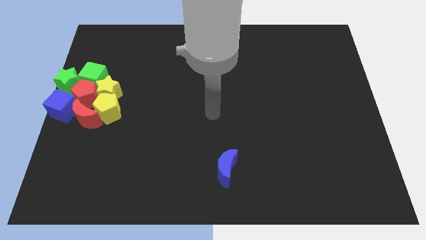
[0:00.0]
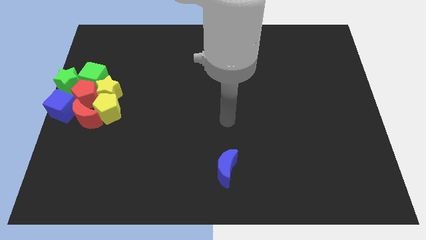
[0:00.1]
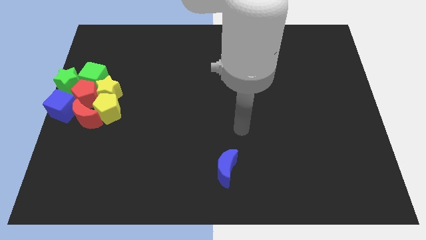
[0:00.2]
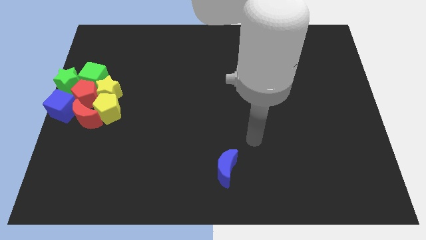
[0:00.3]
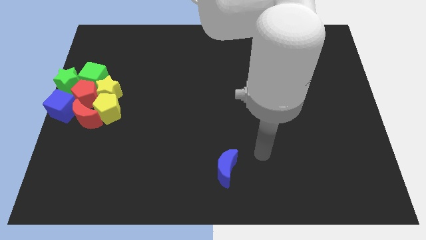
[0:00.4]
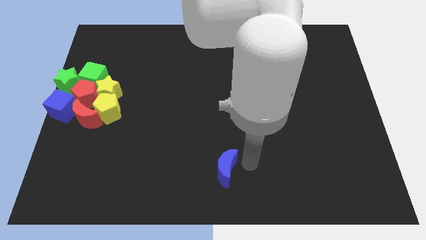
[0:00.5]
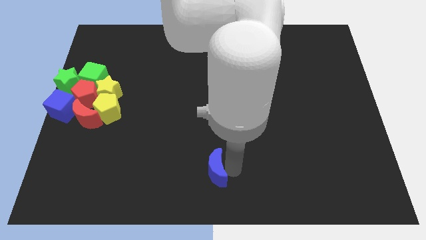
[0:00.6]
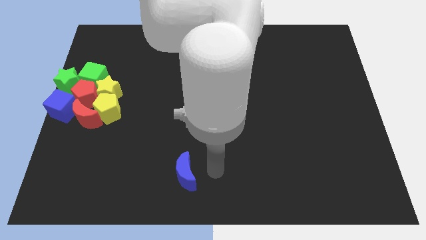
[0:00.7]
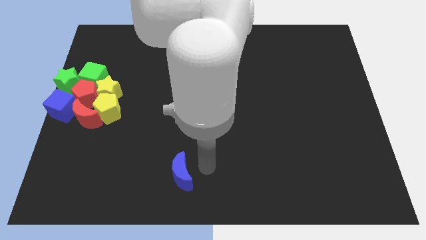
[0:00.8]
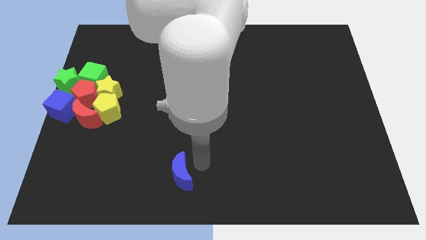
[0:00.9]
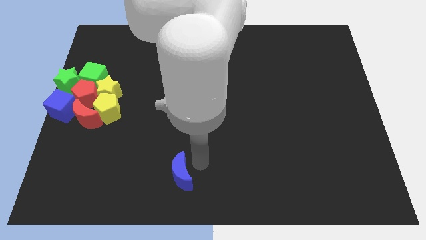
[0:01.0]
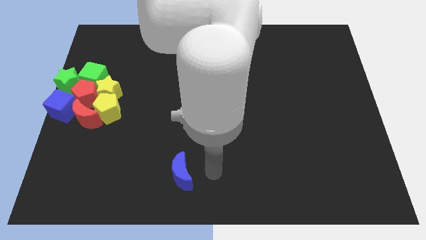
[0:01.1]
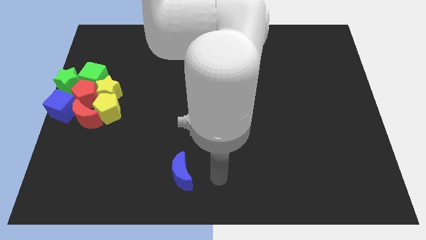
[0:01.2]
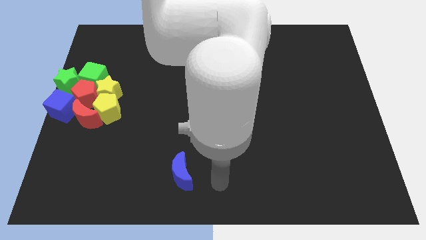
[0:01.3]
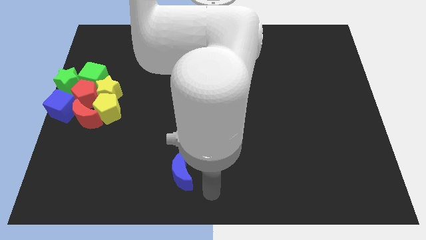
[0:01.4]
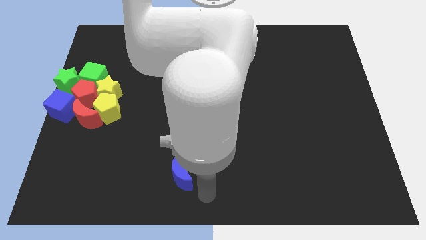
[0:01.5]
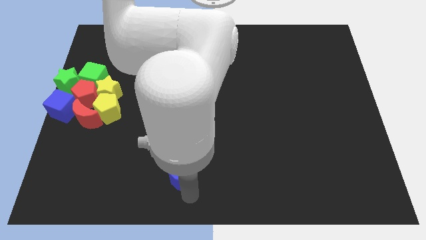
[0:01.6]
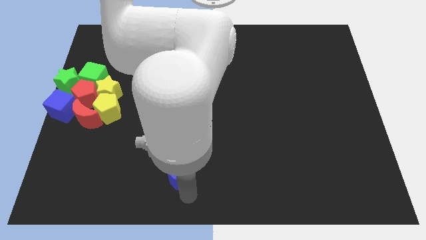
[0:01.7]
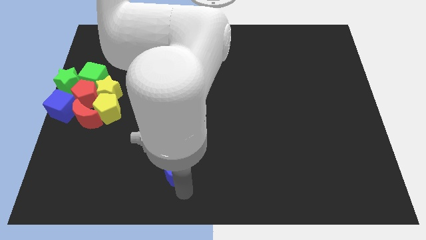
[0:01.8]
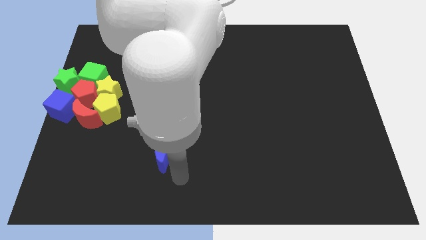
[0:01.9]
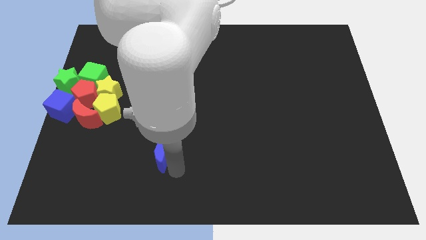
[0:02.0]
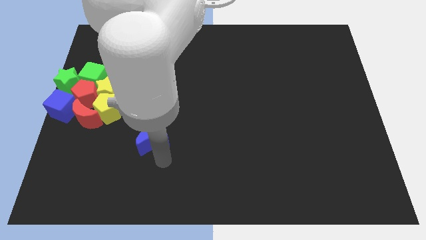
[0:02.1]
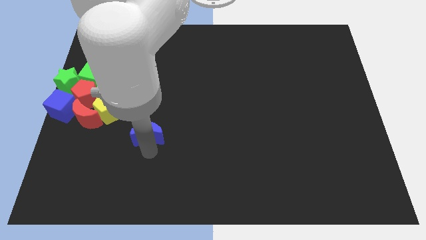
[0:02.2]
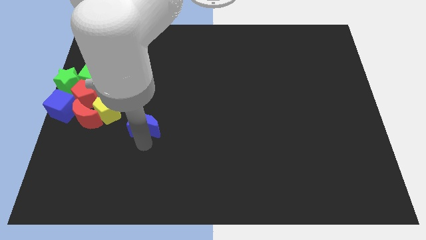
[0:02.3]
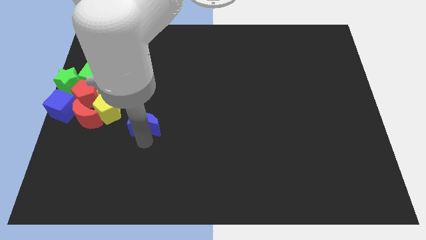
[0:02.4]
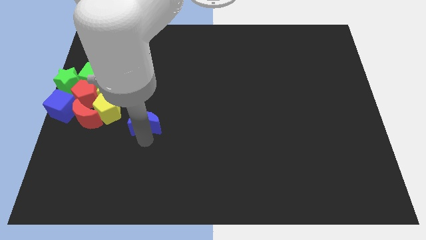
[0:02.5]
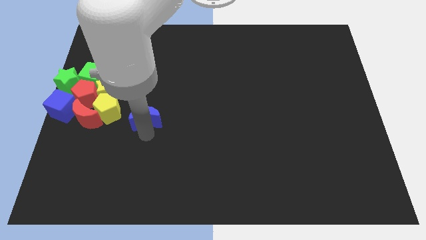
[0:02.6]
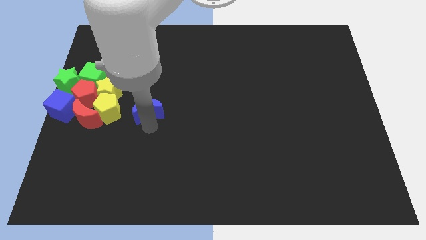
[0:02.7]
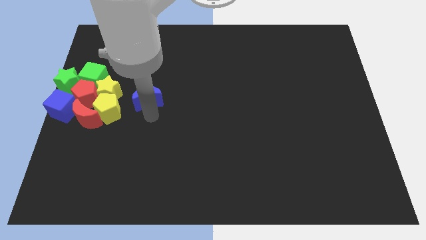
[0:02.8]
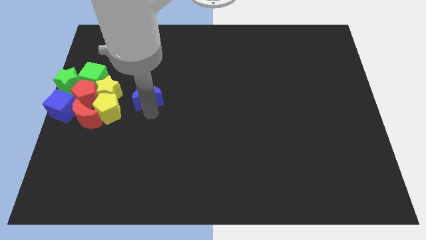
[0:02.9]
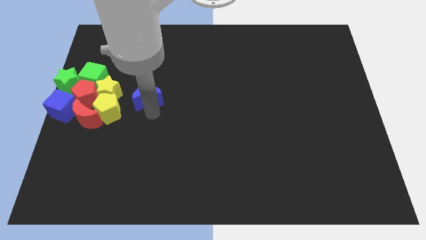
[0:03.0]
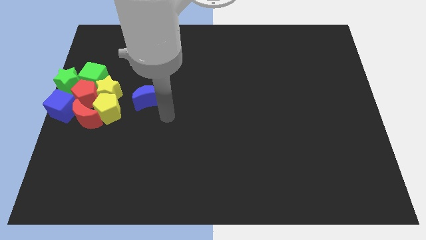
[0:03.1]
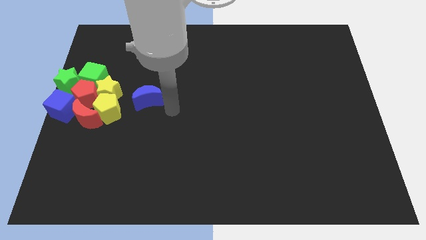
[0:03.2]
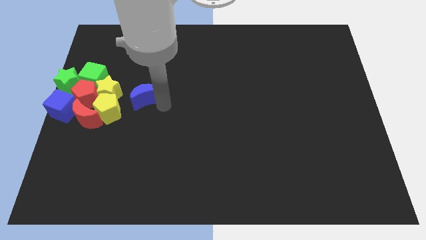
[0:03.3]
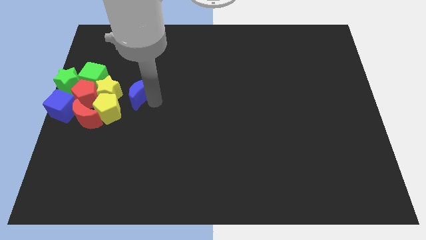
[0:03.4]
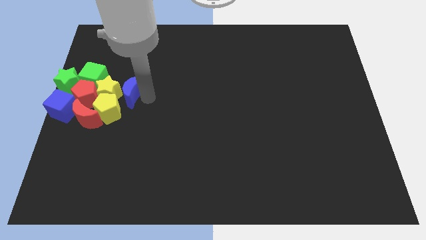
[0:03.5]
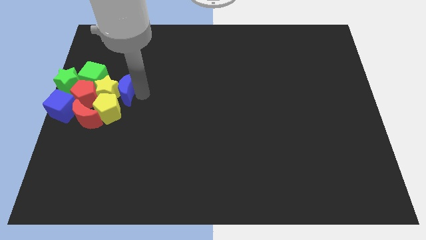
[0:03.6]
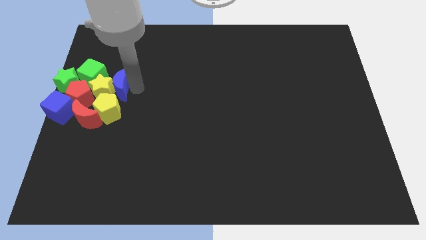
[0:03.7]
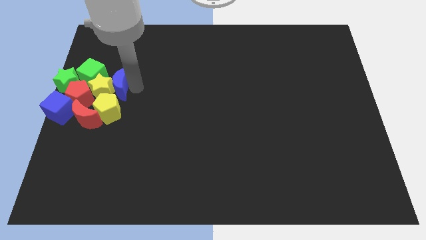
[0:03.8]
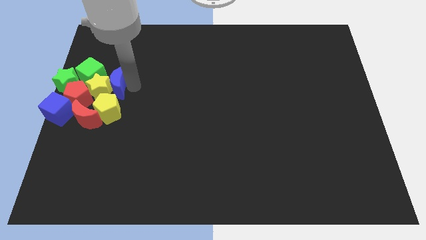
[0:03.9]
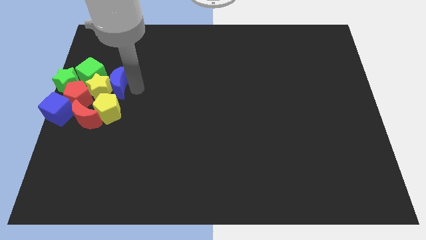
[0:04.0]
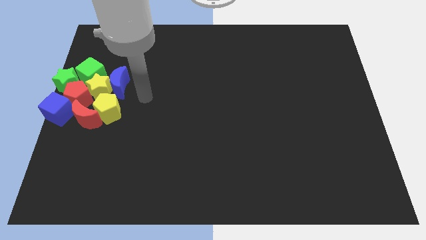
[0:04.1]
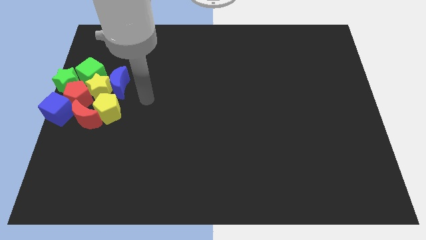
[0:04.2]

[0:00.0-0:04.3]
push the blue moon into the yellow blocks

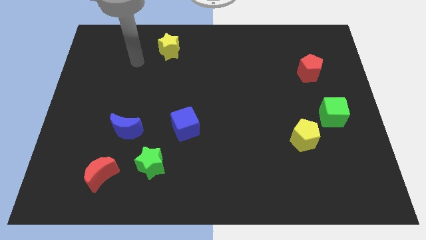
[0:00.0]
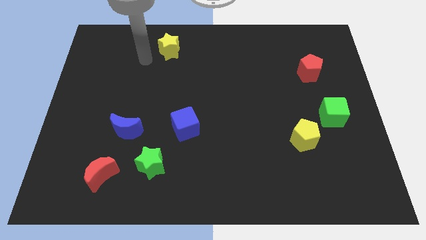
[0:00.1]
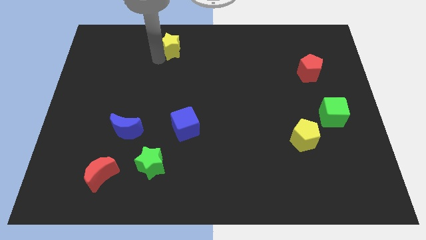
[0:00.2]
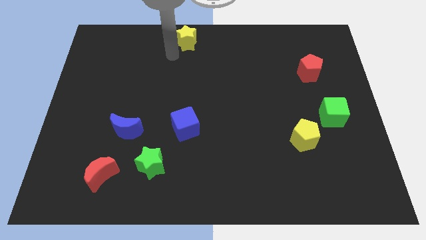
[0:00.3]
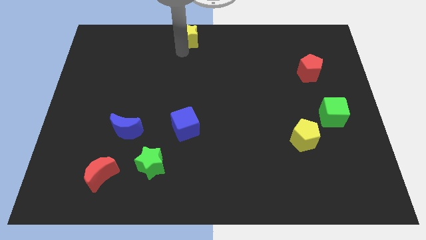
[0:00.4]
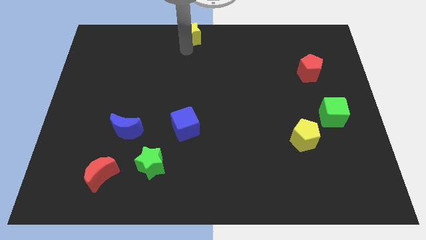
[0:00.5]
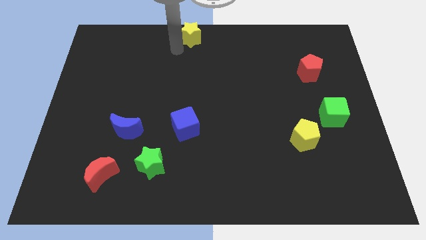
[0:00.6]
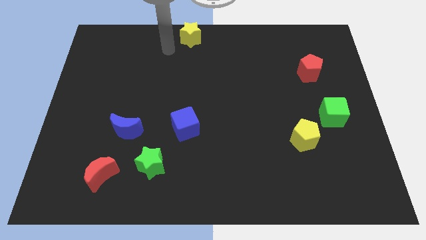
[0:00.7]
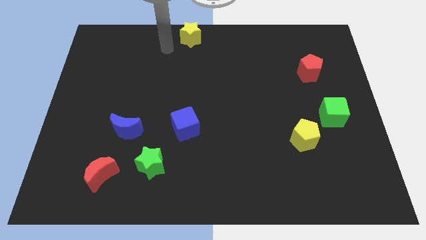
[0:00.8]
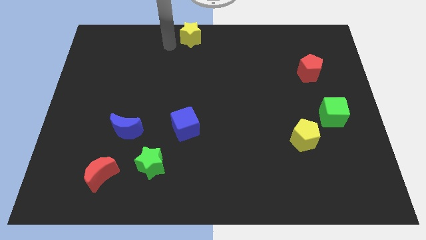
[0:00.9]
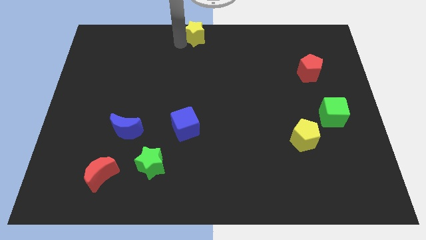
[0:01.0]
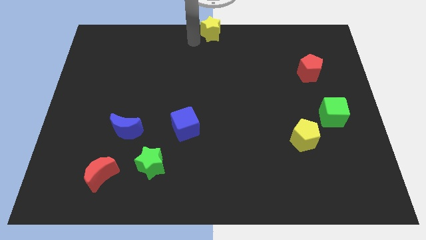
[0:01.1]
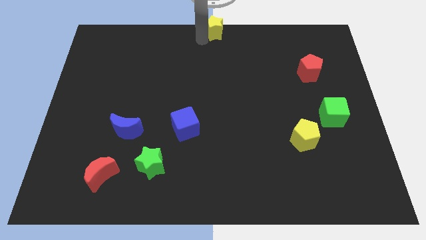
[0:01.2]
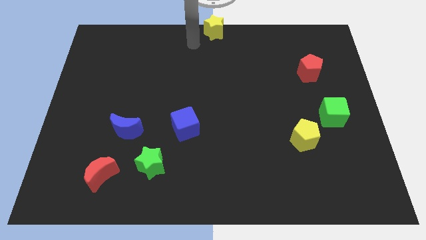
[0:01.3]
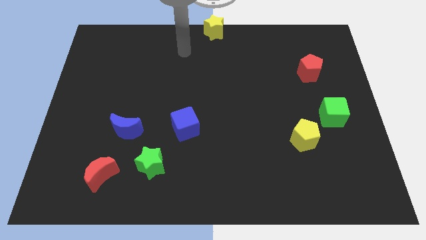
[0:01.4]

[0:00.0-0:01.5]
move the yellow star to the top center

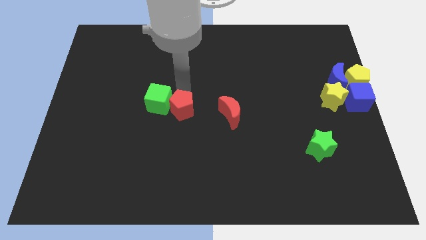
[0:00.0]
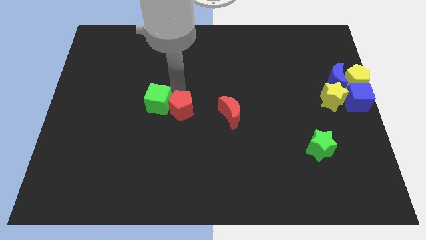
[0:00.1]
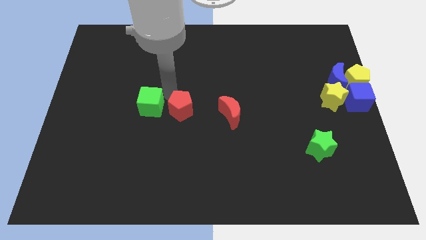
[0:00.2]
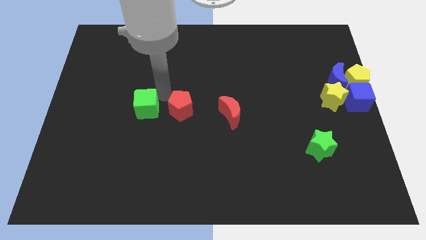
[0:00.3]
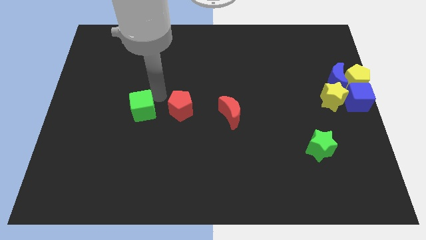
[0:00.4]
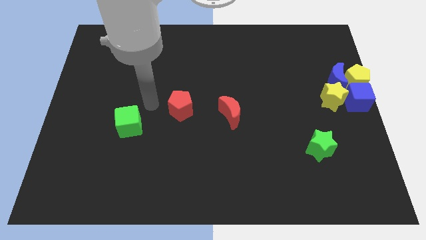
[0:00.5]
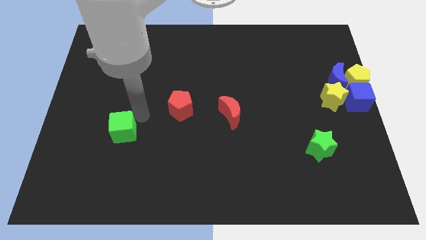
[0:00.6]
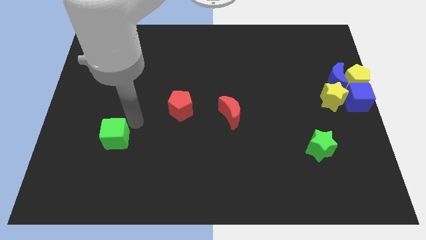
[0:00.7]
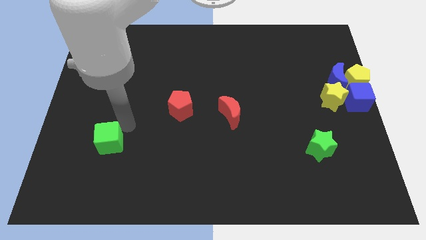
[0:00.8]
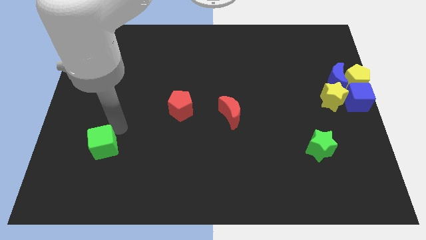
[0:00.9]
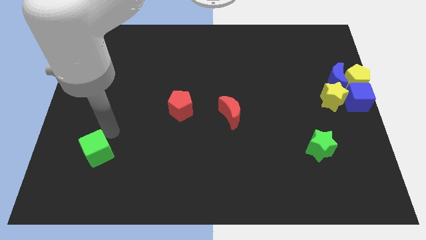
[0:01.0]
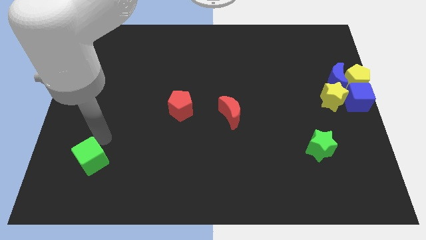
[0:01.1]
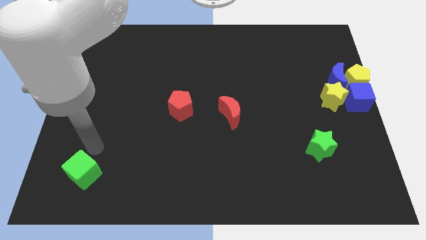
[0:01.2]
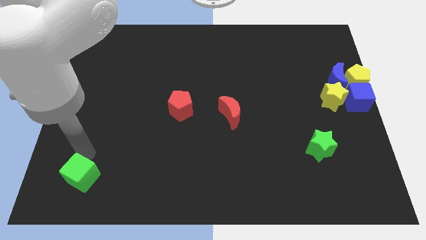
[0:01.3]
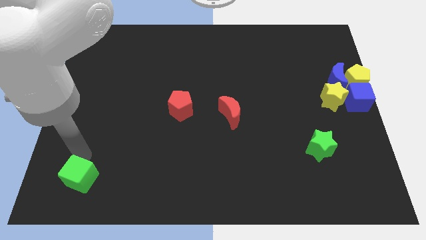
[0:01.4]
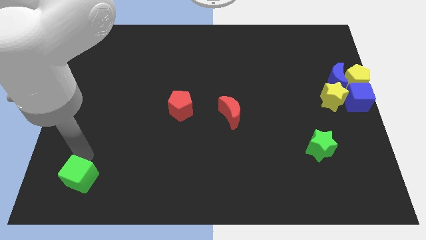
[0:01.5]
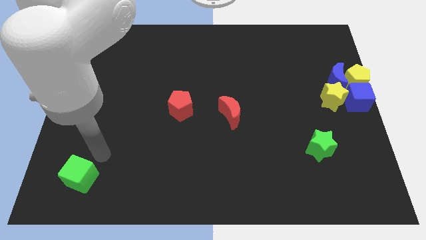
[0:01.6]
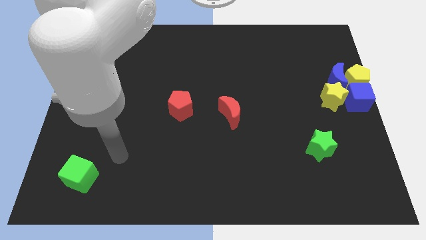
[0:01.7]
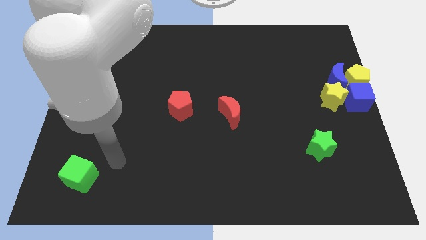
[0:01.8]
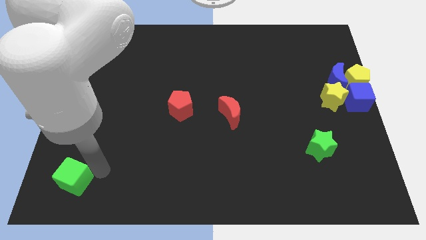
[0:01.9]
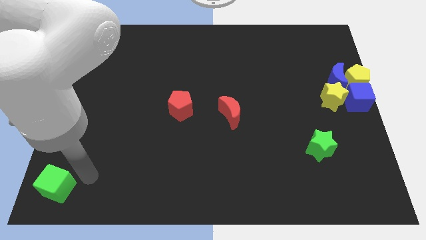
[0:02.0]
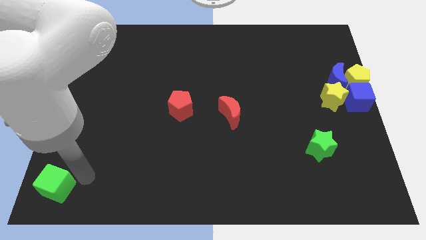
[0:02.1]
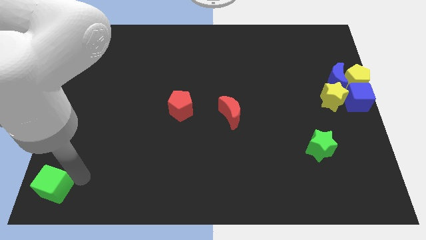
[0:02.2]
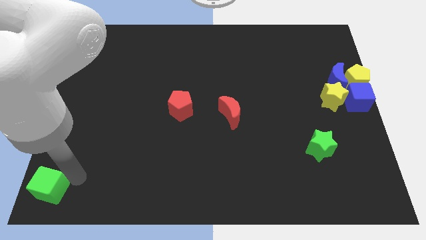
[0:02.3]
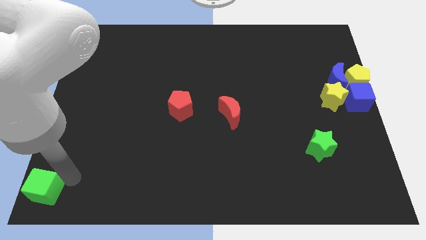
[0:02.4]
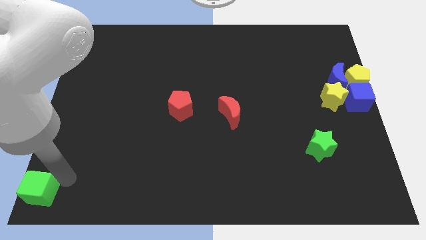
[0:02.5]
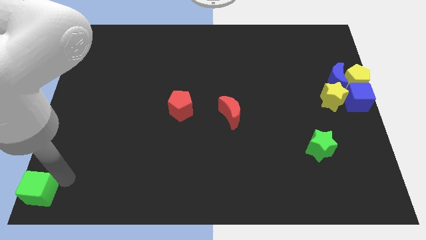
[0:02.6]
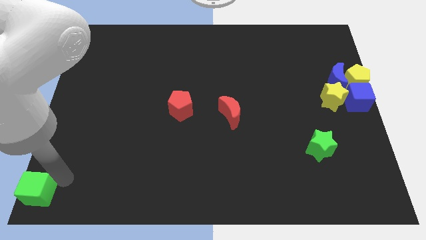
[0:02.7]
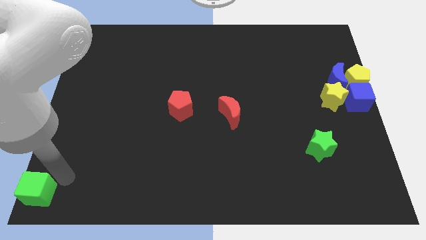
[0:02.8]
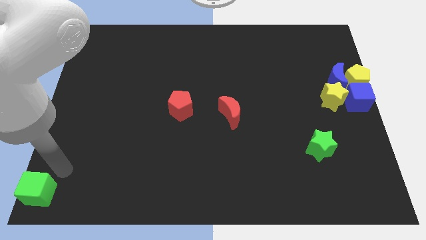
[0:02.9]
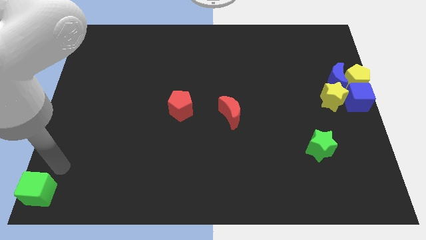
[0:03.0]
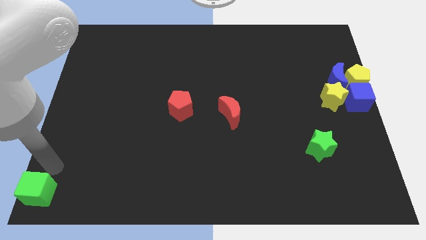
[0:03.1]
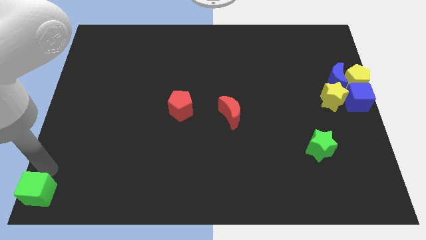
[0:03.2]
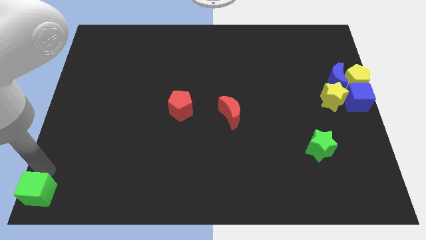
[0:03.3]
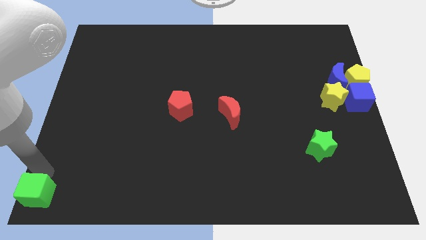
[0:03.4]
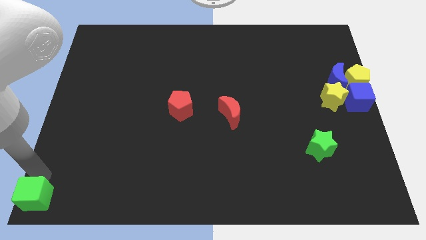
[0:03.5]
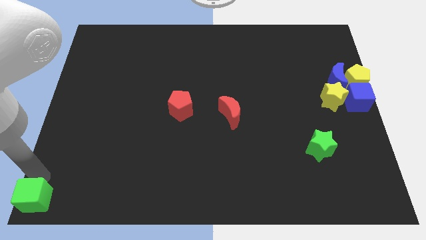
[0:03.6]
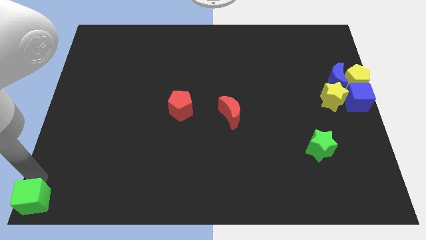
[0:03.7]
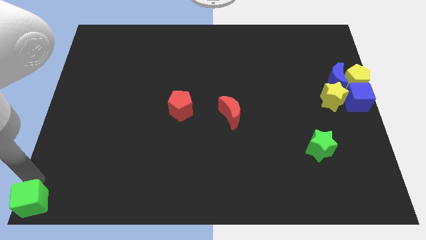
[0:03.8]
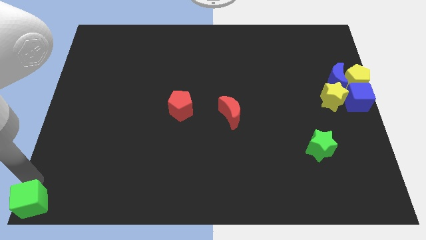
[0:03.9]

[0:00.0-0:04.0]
push the green cube to the bottom left corner of the board
